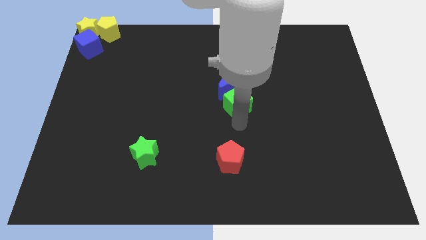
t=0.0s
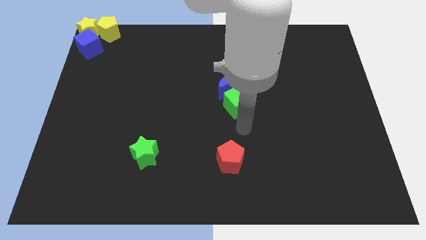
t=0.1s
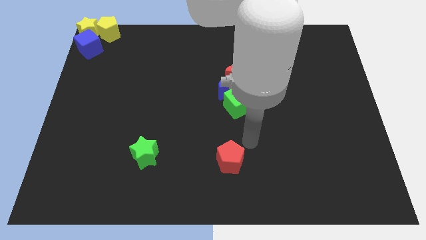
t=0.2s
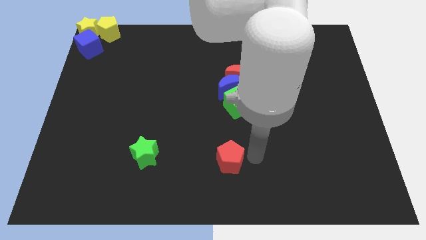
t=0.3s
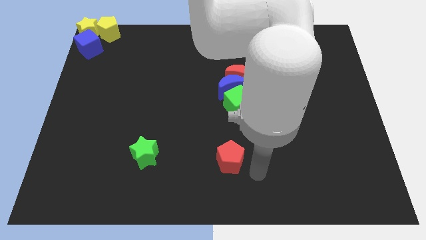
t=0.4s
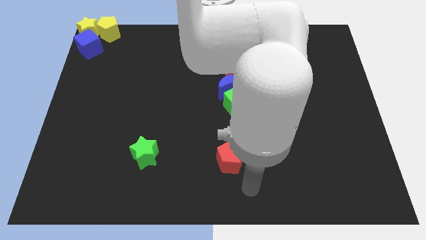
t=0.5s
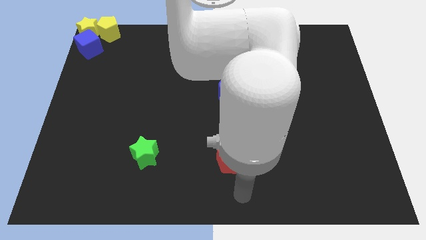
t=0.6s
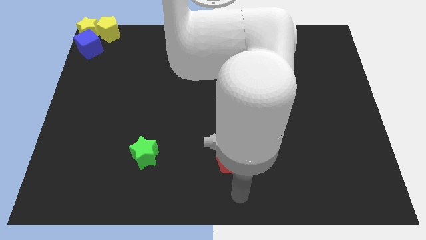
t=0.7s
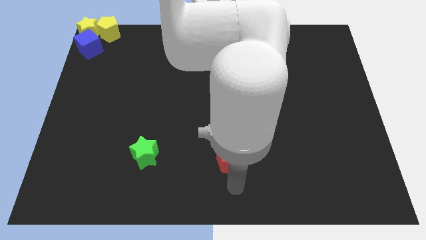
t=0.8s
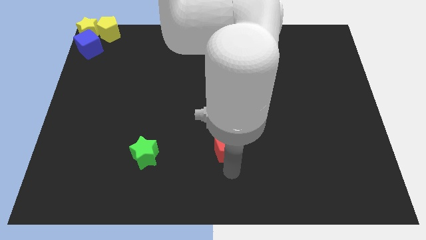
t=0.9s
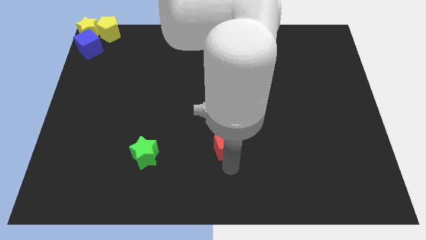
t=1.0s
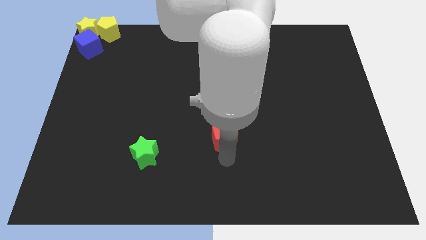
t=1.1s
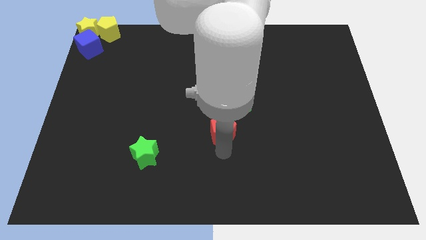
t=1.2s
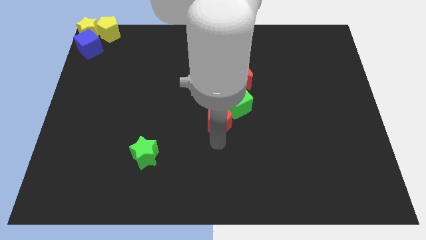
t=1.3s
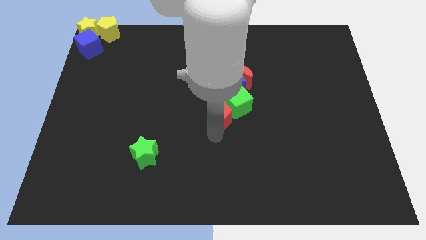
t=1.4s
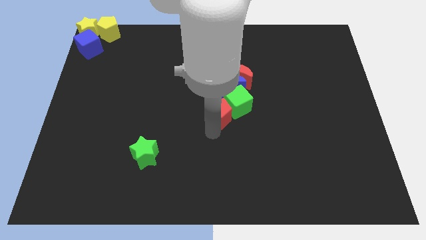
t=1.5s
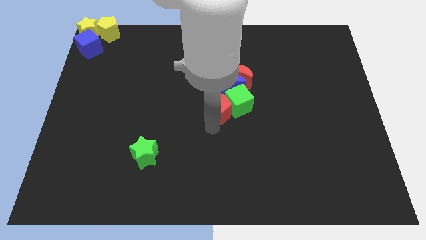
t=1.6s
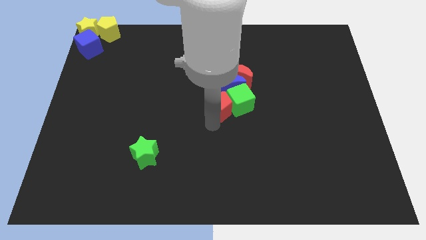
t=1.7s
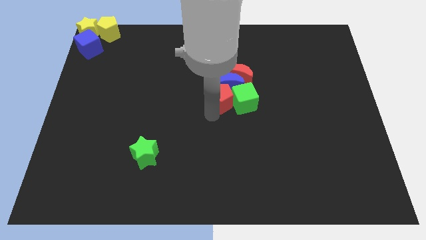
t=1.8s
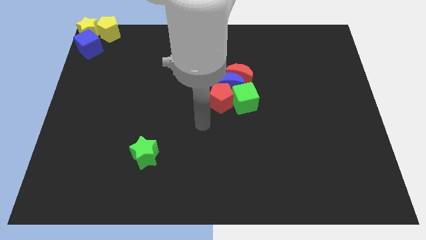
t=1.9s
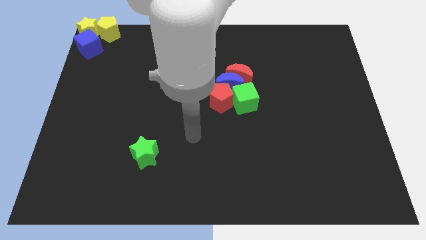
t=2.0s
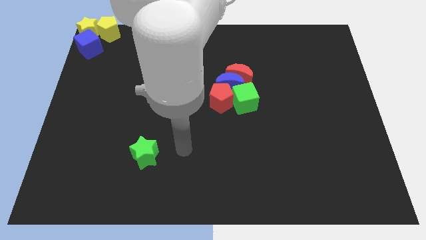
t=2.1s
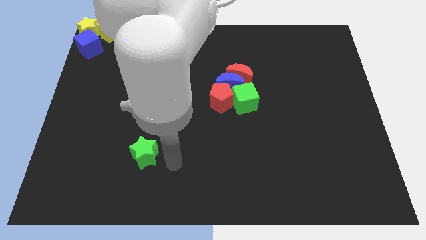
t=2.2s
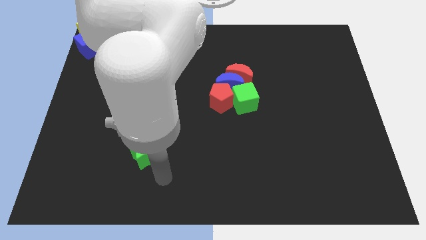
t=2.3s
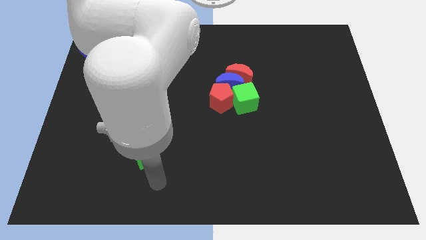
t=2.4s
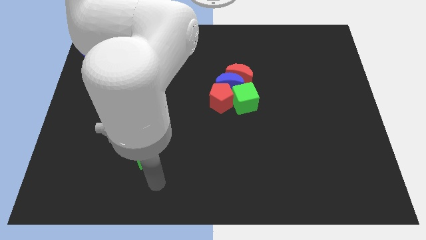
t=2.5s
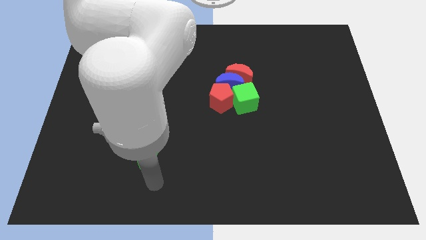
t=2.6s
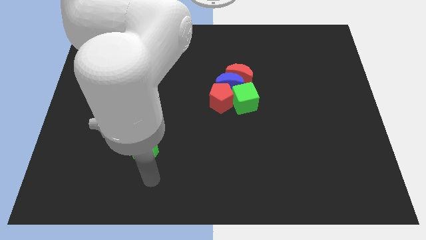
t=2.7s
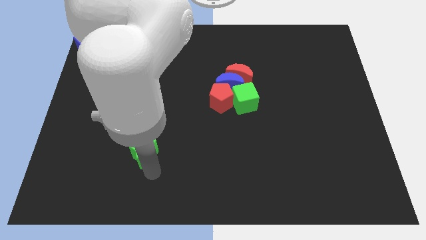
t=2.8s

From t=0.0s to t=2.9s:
place the arm down to the green star

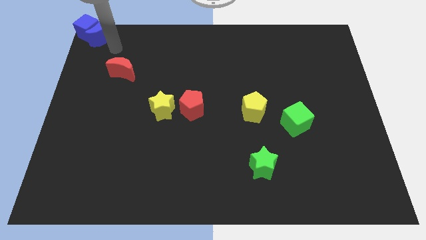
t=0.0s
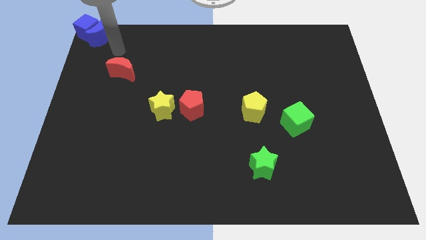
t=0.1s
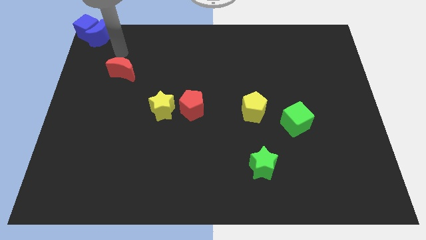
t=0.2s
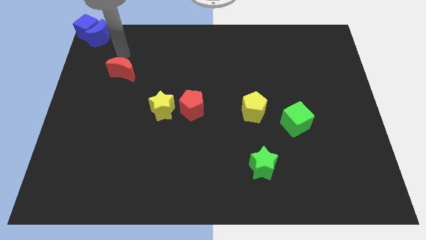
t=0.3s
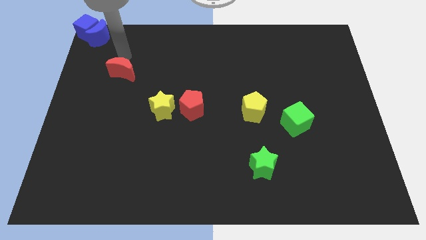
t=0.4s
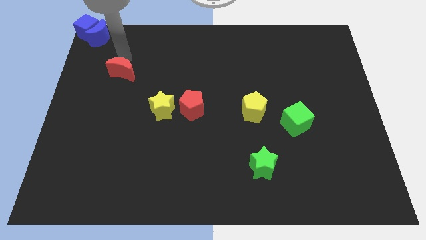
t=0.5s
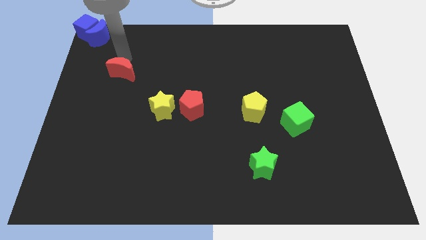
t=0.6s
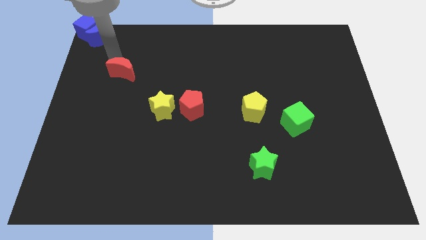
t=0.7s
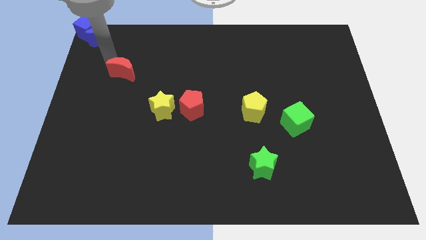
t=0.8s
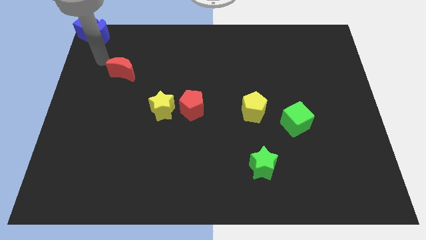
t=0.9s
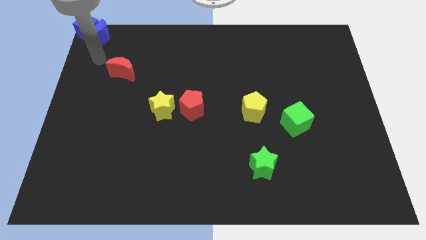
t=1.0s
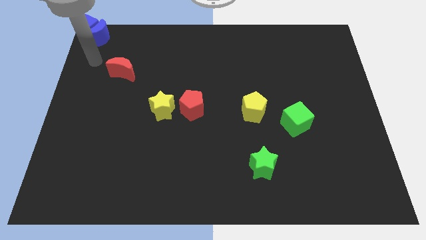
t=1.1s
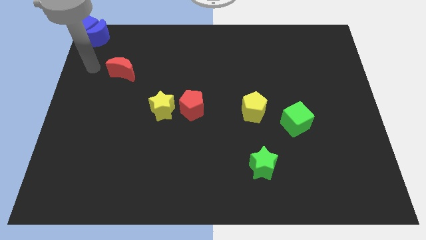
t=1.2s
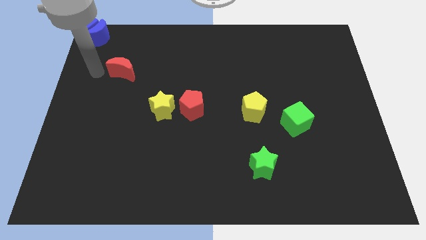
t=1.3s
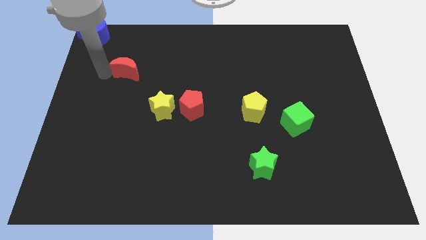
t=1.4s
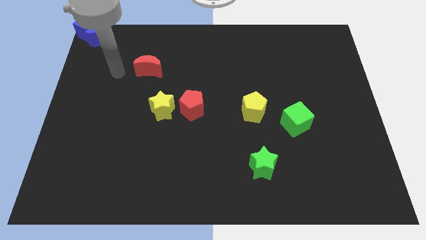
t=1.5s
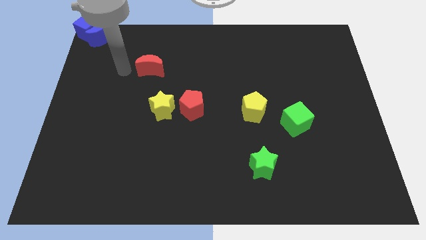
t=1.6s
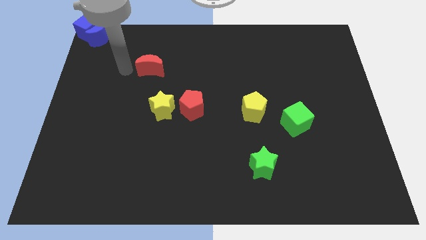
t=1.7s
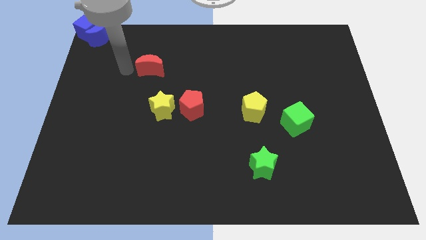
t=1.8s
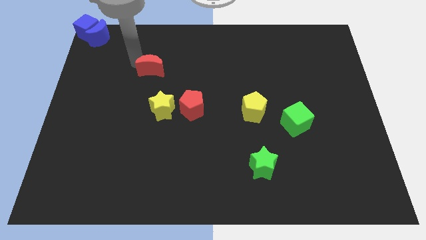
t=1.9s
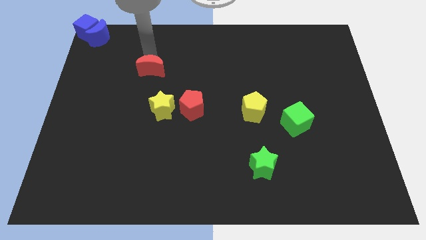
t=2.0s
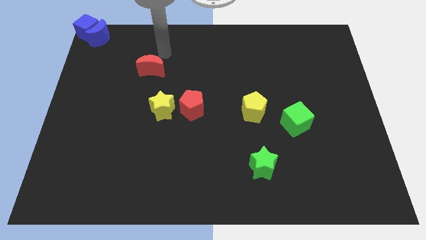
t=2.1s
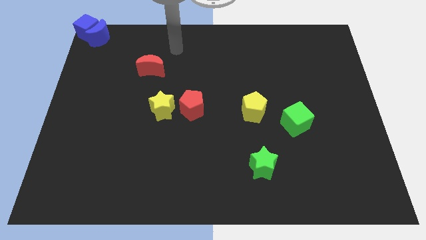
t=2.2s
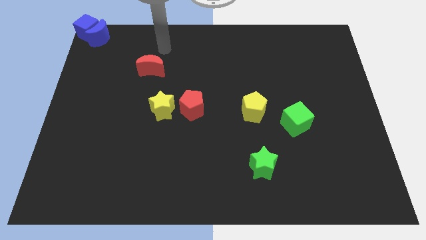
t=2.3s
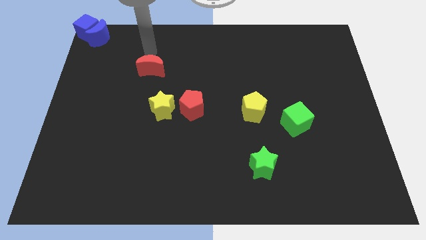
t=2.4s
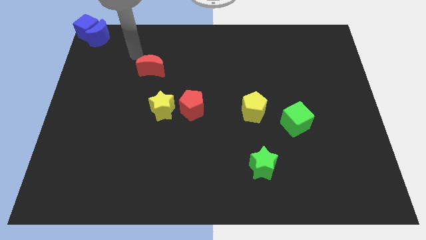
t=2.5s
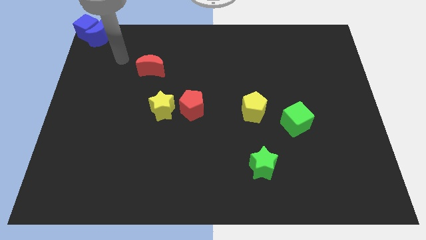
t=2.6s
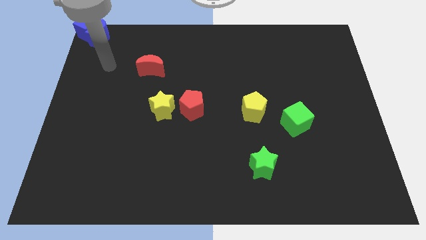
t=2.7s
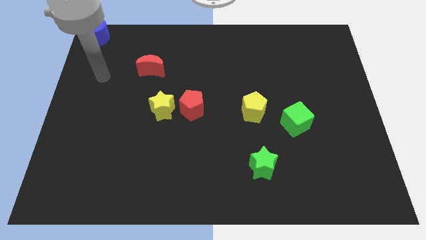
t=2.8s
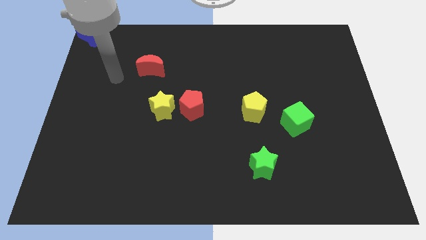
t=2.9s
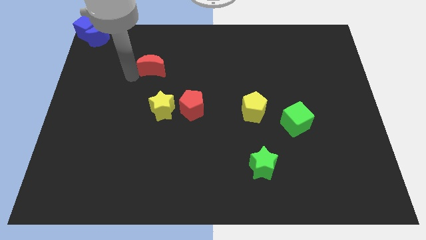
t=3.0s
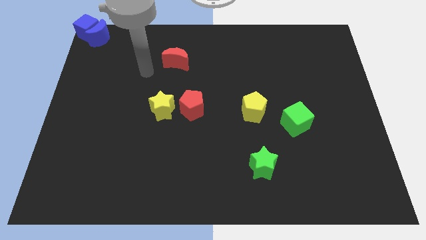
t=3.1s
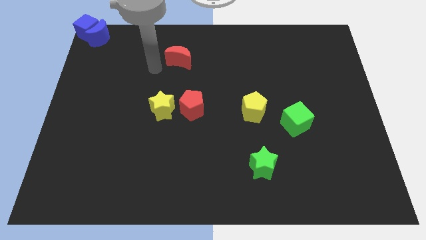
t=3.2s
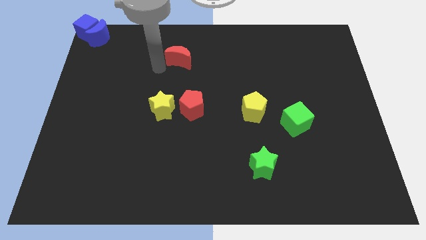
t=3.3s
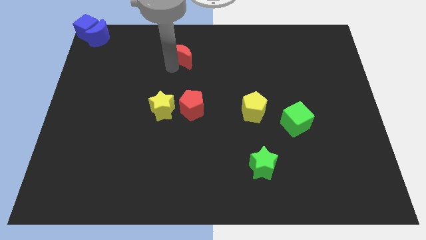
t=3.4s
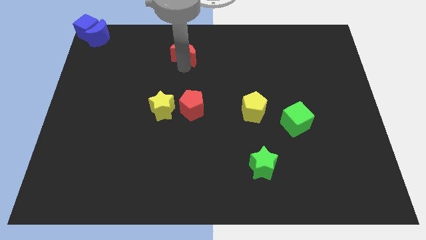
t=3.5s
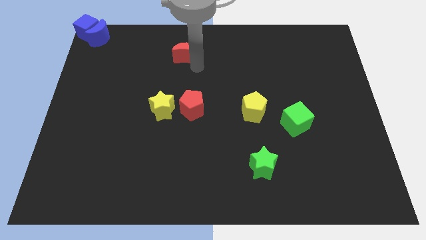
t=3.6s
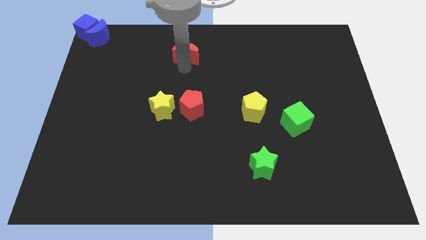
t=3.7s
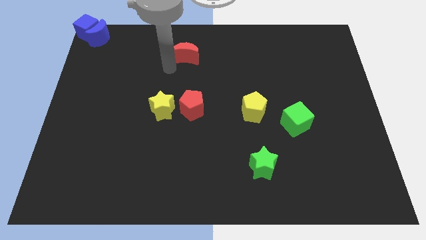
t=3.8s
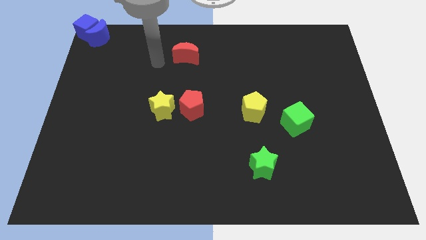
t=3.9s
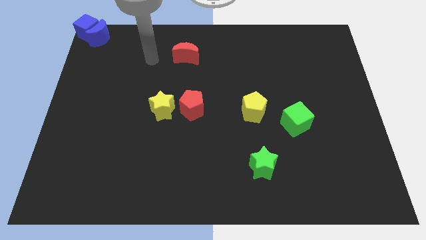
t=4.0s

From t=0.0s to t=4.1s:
place the red moon on the top of the red pentagon

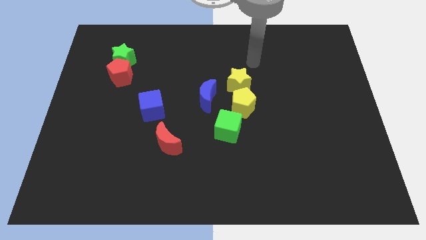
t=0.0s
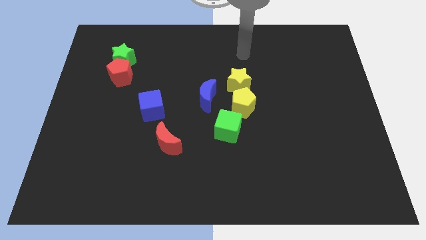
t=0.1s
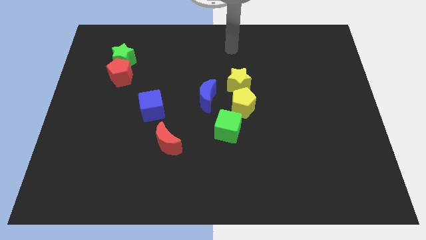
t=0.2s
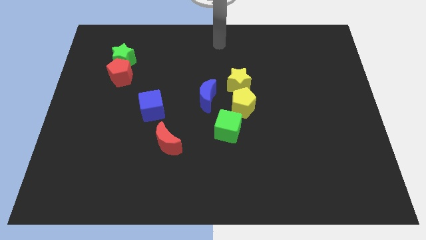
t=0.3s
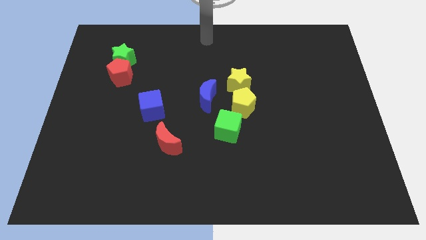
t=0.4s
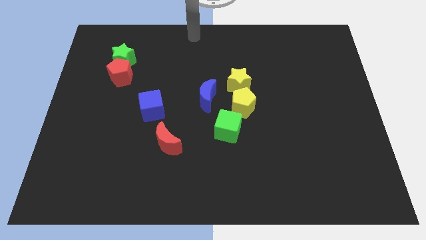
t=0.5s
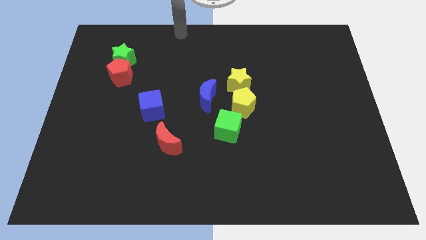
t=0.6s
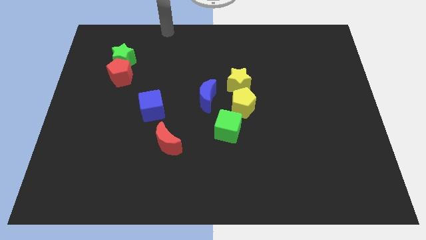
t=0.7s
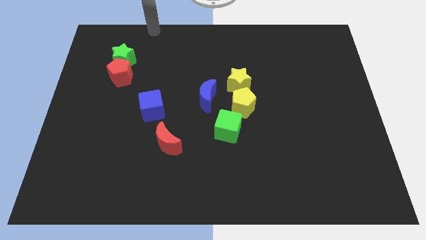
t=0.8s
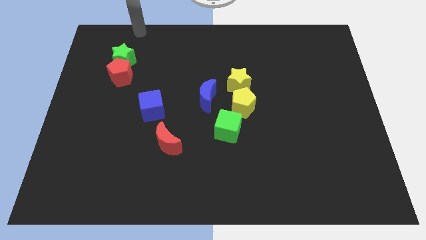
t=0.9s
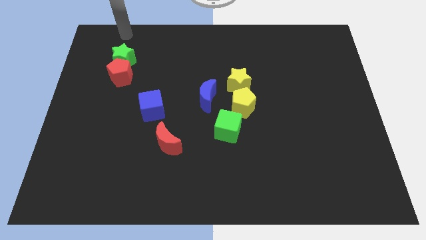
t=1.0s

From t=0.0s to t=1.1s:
move your arm above the green star

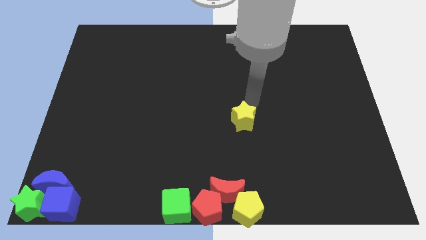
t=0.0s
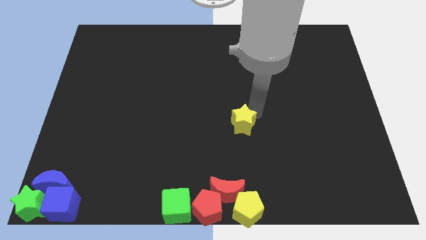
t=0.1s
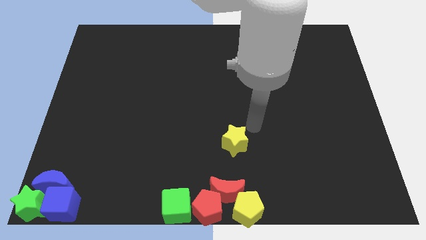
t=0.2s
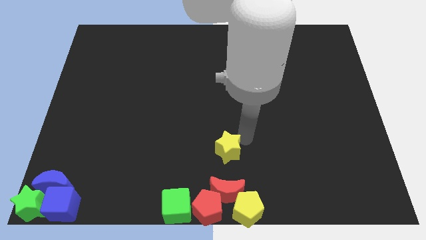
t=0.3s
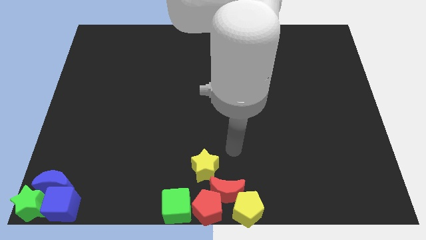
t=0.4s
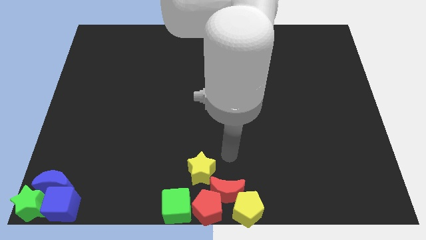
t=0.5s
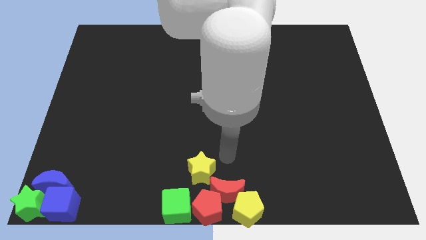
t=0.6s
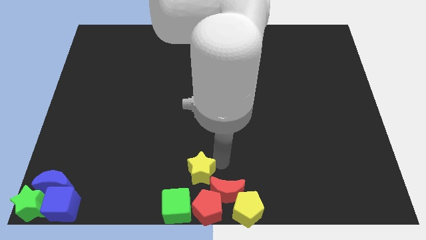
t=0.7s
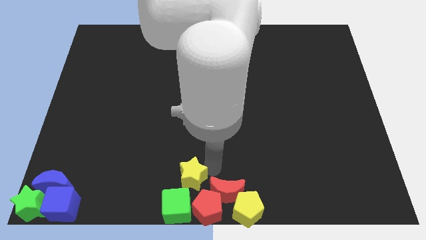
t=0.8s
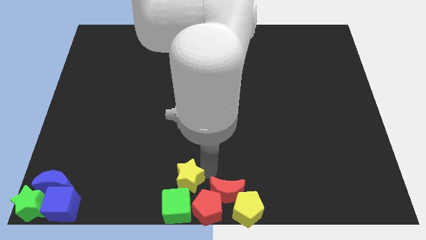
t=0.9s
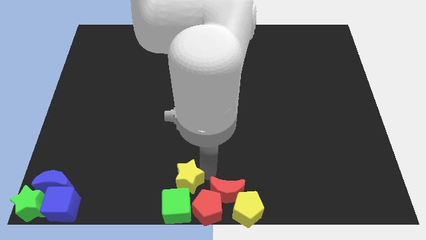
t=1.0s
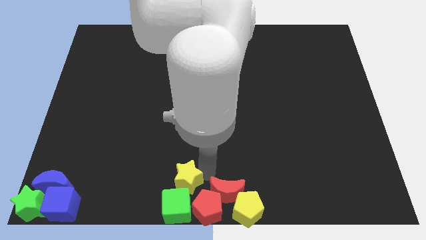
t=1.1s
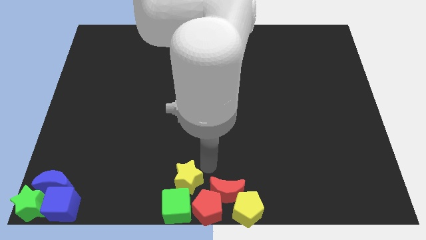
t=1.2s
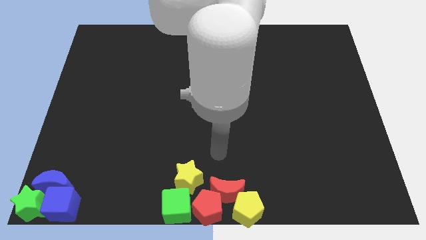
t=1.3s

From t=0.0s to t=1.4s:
move the yellow star towards the top of the green cube
